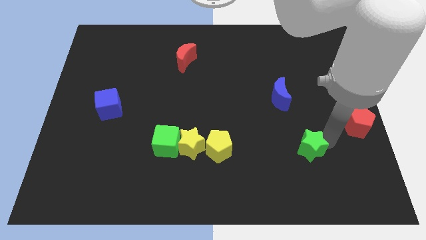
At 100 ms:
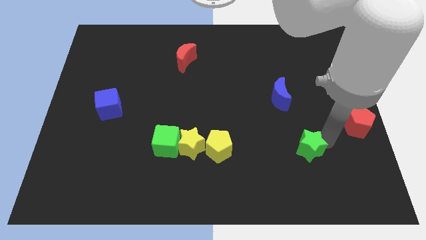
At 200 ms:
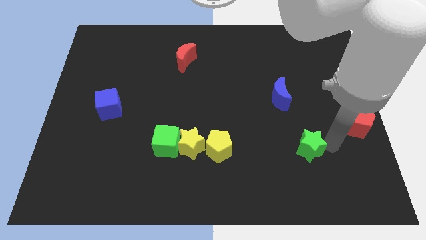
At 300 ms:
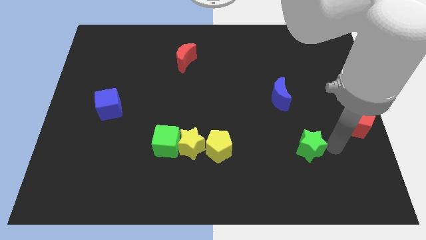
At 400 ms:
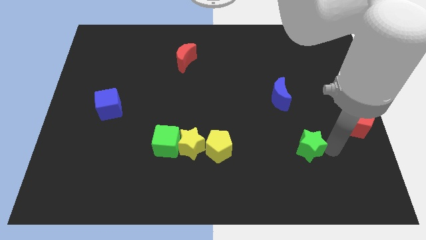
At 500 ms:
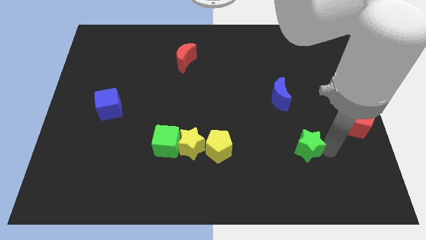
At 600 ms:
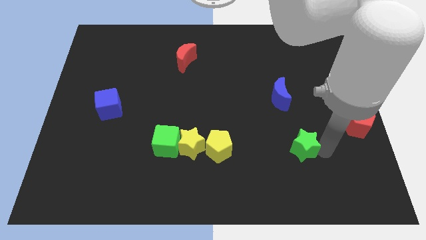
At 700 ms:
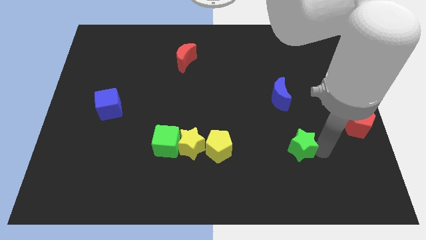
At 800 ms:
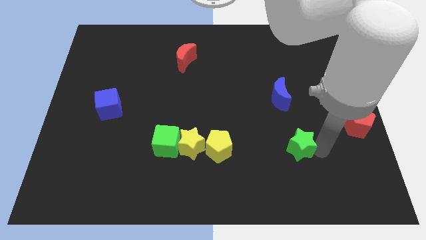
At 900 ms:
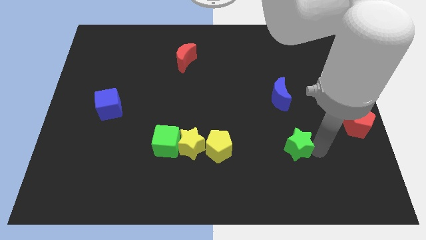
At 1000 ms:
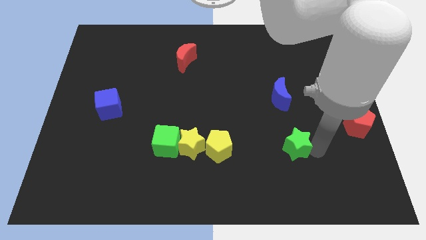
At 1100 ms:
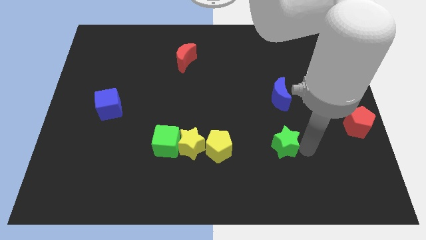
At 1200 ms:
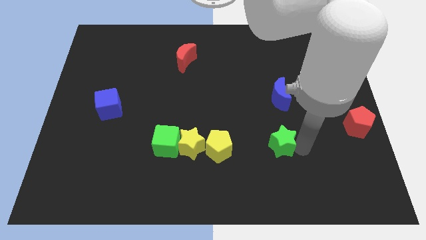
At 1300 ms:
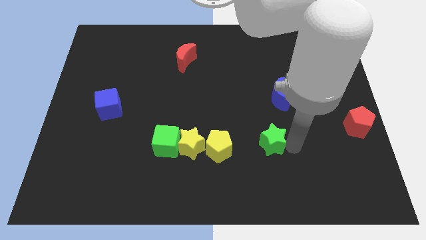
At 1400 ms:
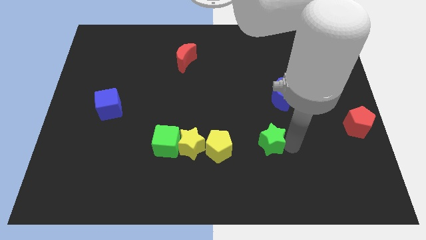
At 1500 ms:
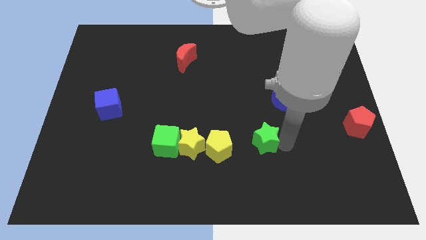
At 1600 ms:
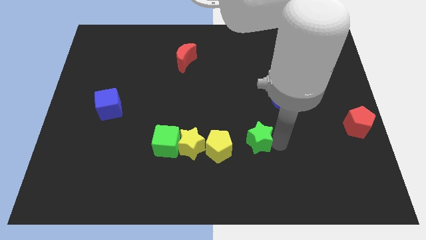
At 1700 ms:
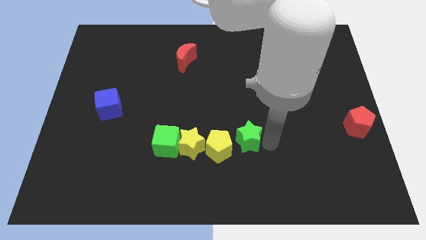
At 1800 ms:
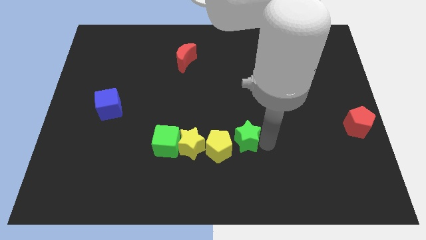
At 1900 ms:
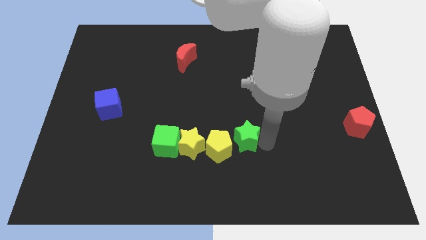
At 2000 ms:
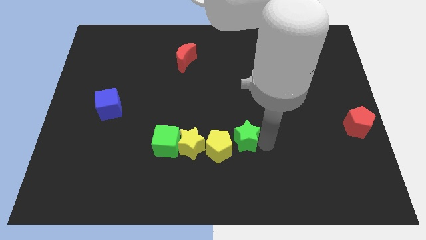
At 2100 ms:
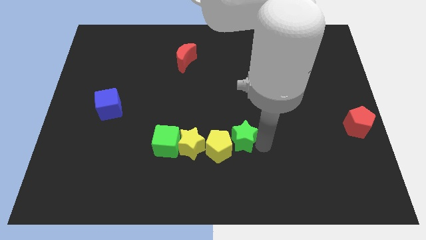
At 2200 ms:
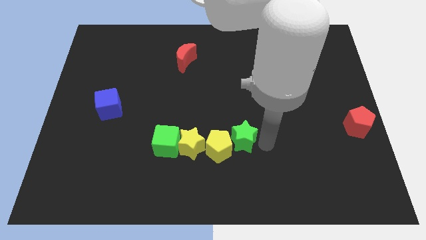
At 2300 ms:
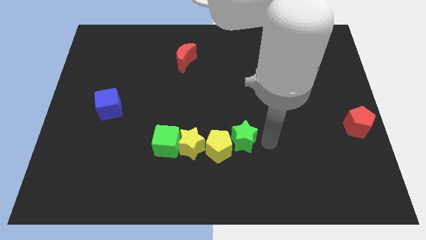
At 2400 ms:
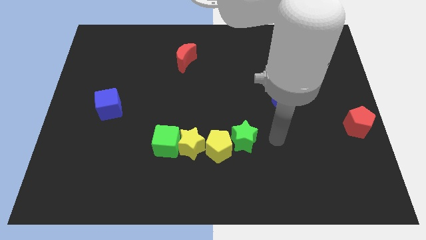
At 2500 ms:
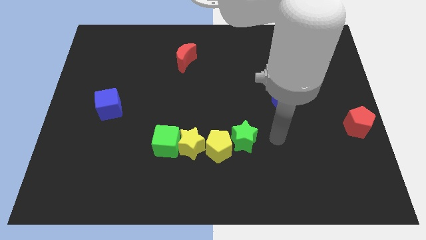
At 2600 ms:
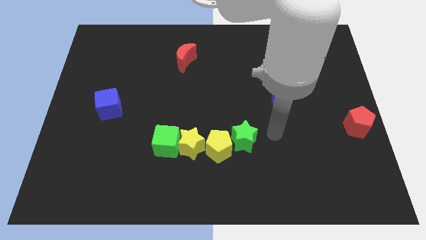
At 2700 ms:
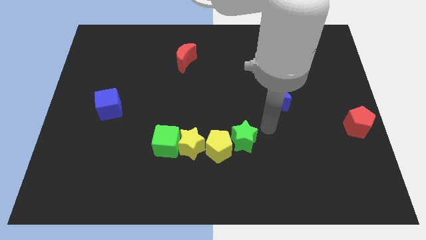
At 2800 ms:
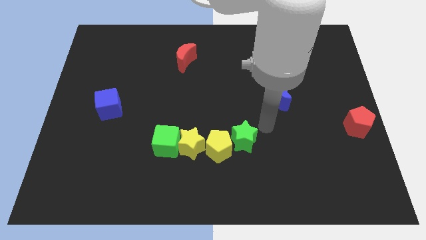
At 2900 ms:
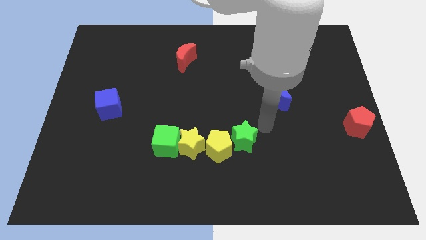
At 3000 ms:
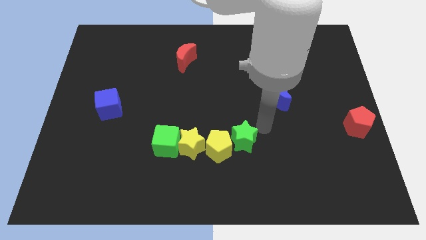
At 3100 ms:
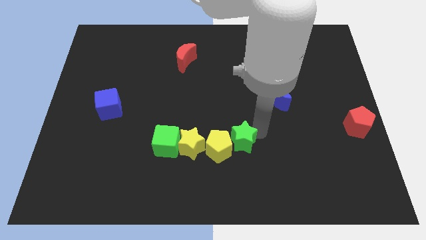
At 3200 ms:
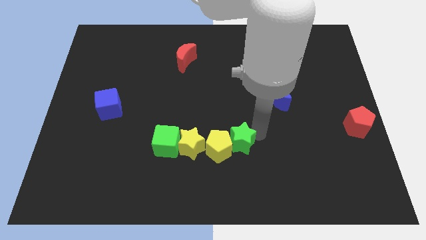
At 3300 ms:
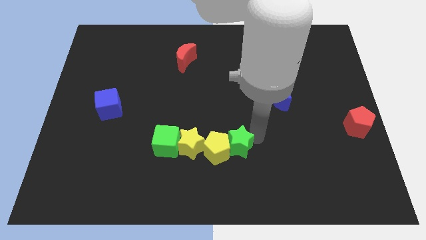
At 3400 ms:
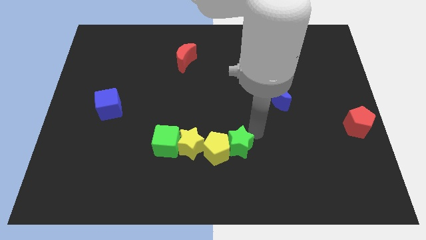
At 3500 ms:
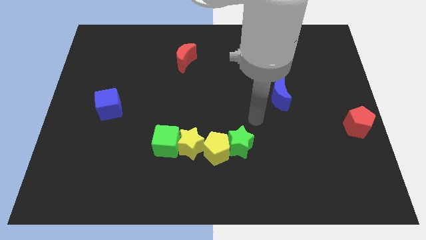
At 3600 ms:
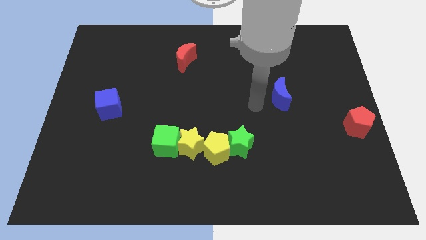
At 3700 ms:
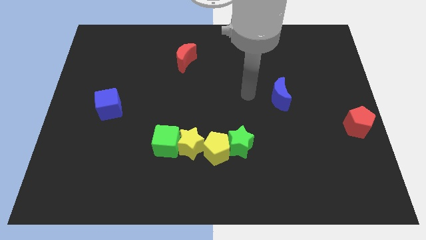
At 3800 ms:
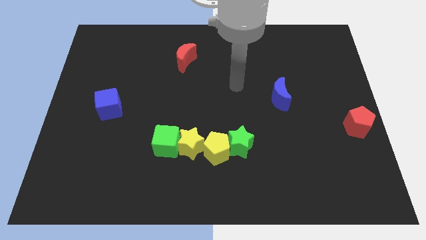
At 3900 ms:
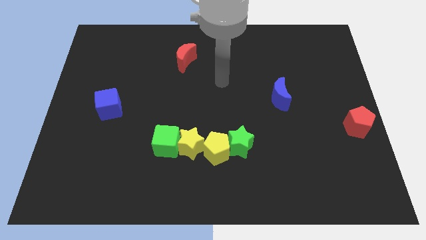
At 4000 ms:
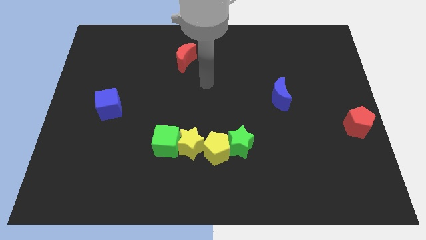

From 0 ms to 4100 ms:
slide green star into yellow pentagon

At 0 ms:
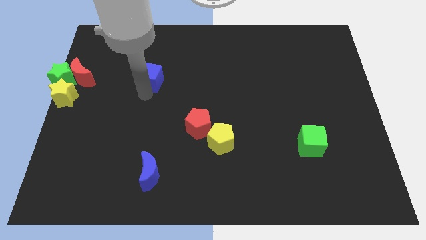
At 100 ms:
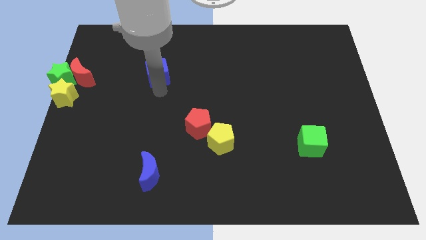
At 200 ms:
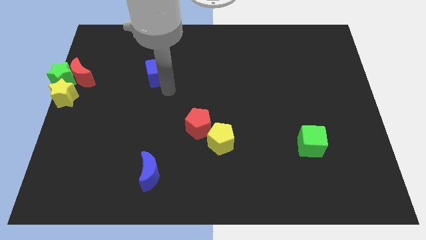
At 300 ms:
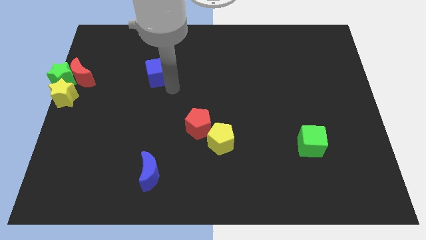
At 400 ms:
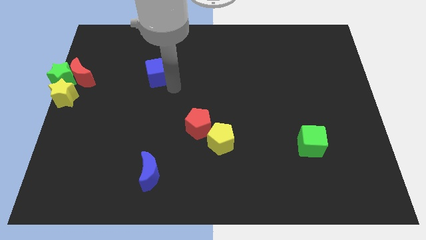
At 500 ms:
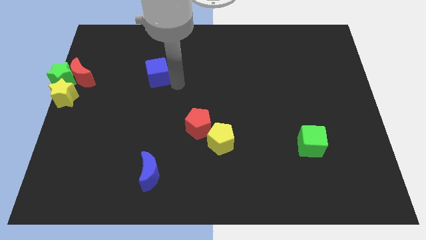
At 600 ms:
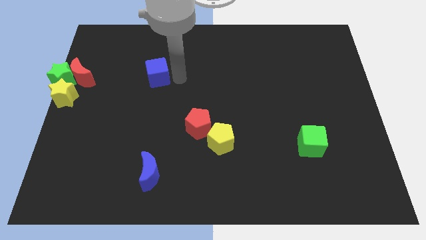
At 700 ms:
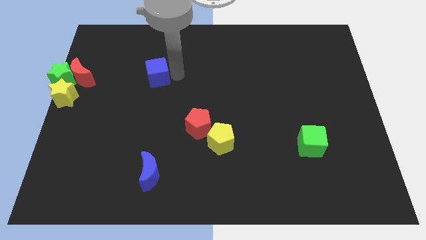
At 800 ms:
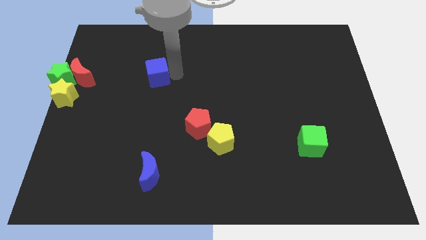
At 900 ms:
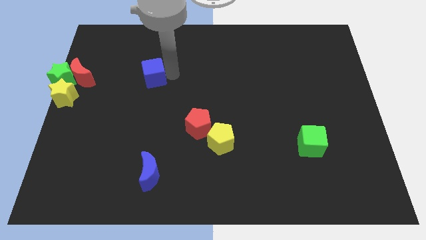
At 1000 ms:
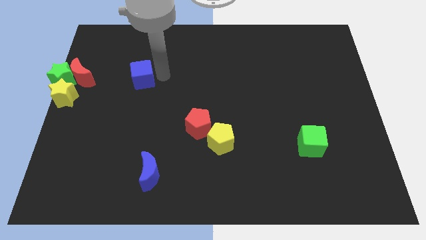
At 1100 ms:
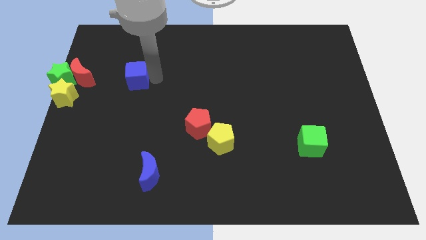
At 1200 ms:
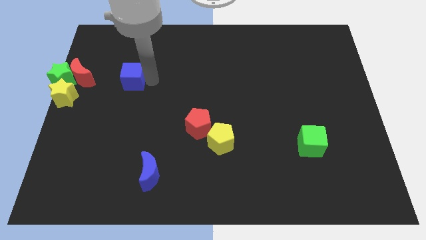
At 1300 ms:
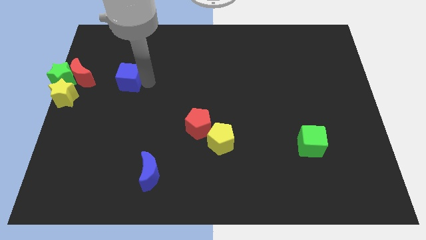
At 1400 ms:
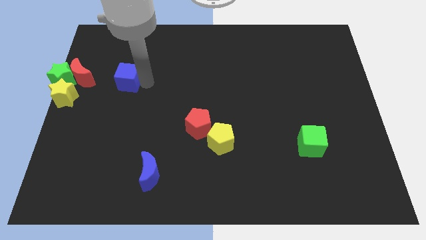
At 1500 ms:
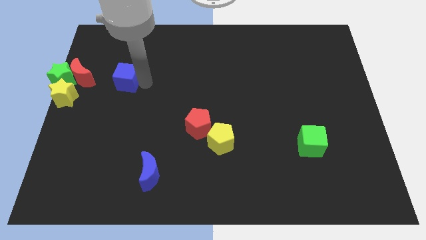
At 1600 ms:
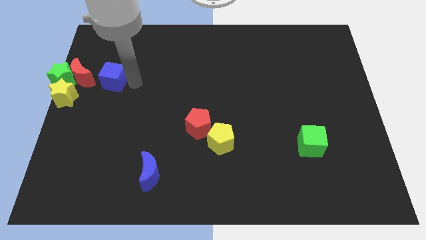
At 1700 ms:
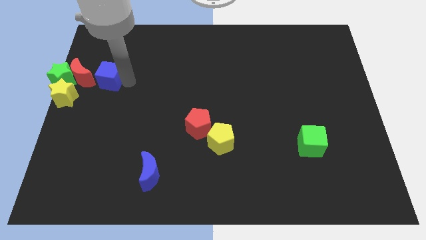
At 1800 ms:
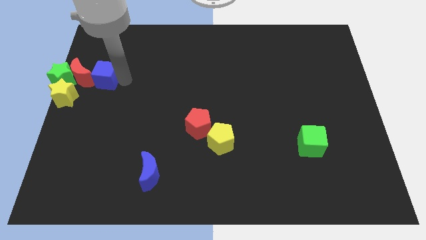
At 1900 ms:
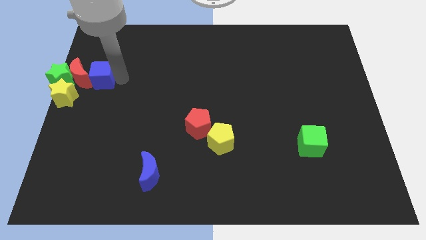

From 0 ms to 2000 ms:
push the blue cube into the red moon

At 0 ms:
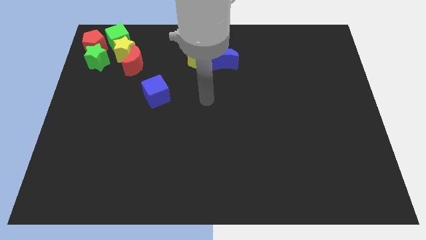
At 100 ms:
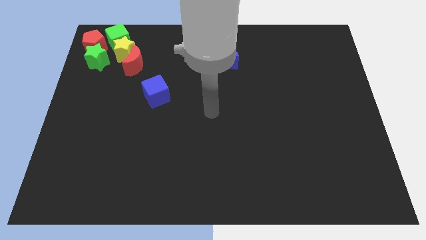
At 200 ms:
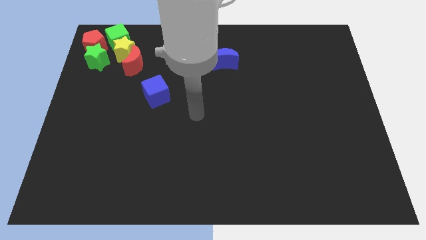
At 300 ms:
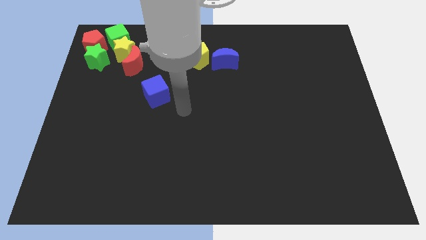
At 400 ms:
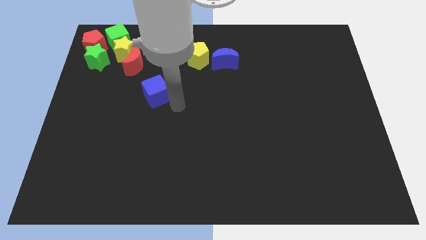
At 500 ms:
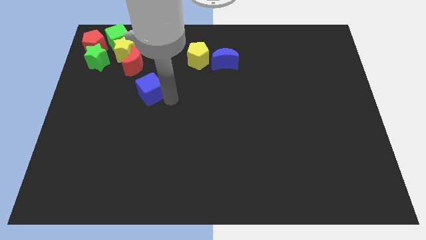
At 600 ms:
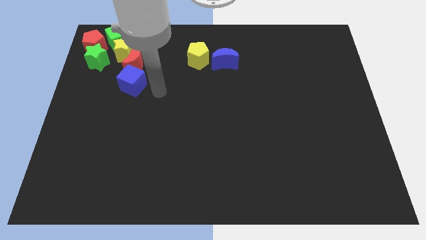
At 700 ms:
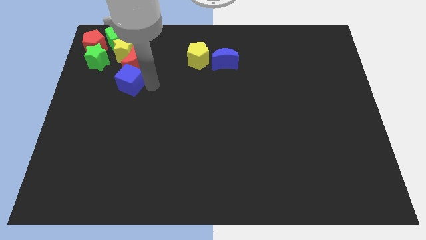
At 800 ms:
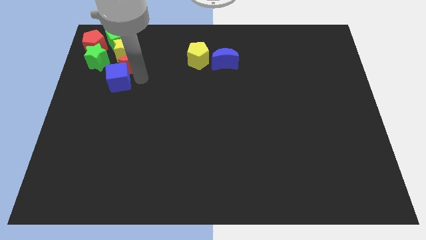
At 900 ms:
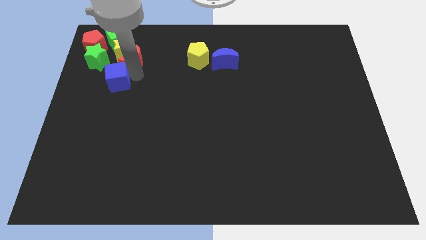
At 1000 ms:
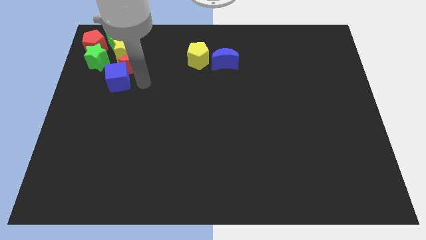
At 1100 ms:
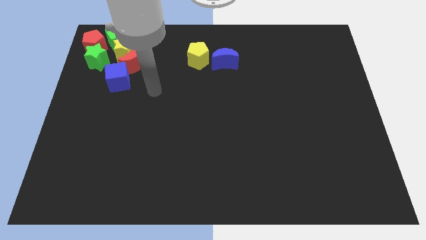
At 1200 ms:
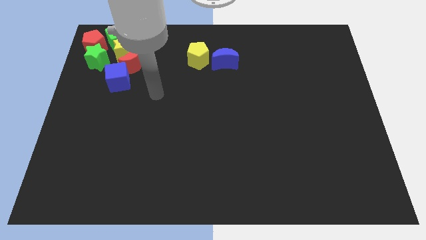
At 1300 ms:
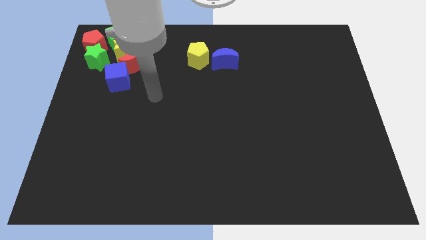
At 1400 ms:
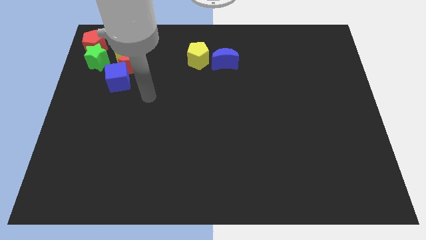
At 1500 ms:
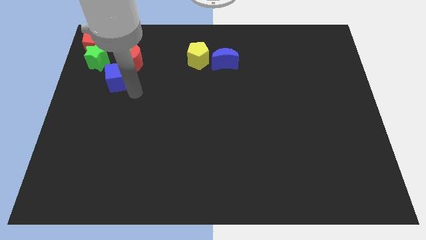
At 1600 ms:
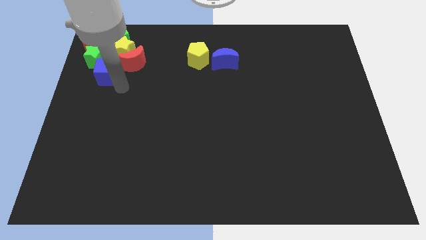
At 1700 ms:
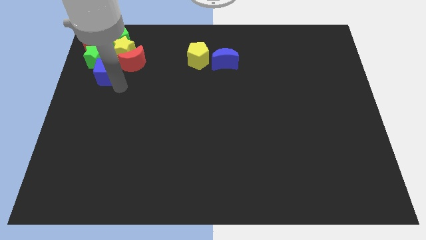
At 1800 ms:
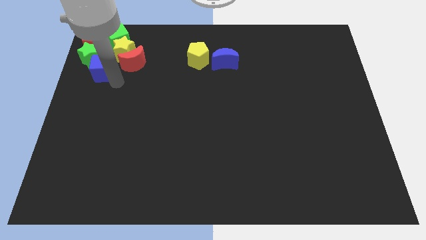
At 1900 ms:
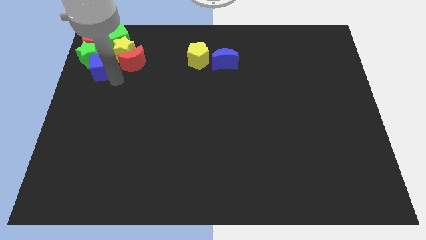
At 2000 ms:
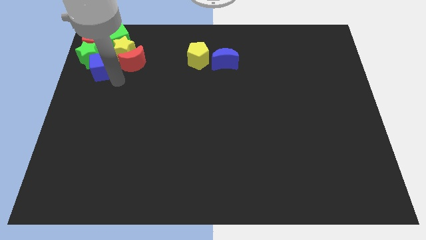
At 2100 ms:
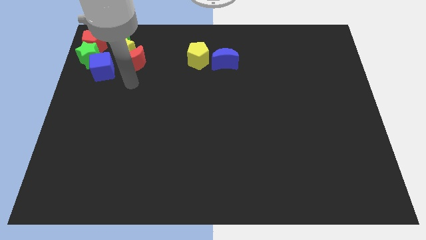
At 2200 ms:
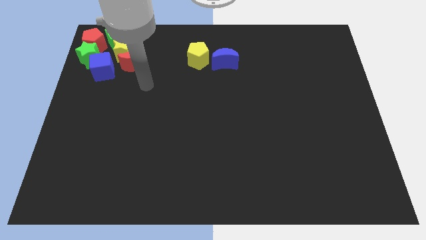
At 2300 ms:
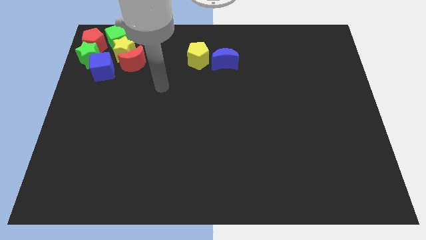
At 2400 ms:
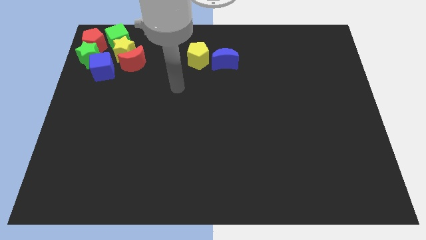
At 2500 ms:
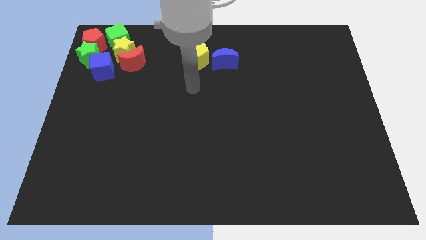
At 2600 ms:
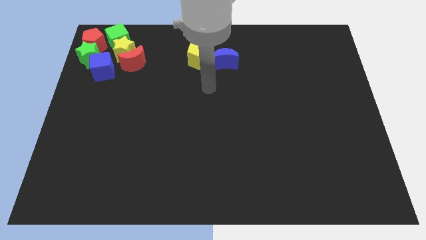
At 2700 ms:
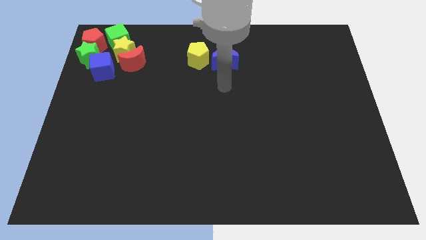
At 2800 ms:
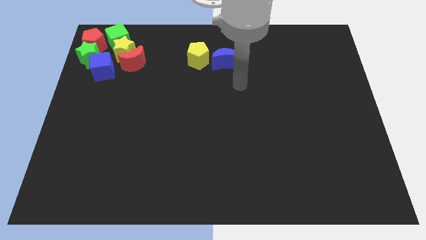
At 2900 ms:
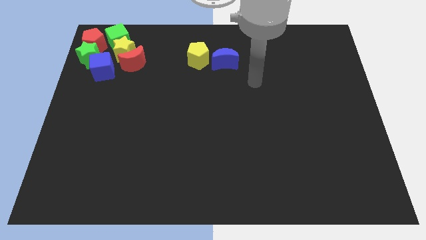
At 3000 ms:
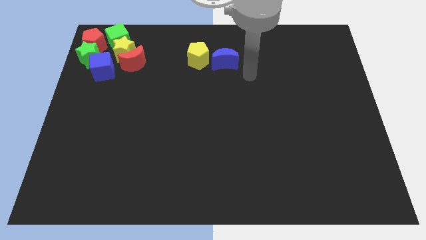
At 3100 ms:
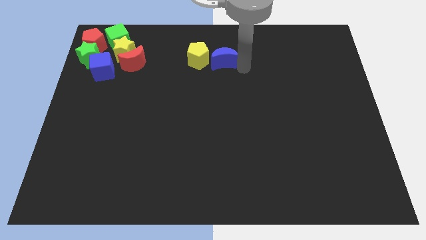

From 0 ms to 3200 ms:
move the blue cube to the bottom of the green star
